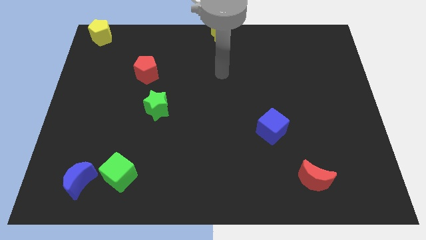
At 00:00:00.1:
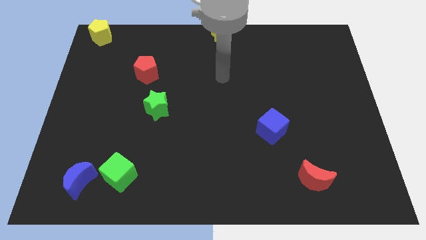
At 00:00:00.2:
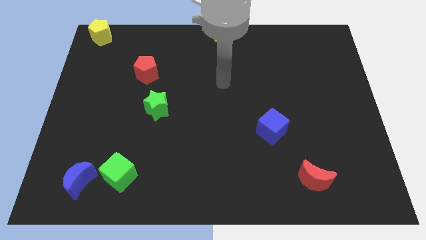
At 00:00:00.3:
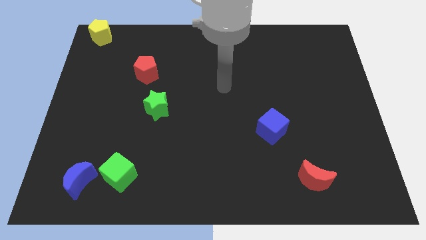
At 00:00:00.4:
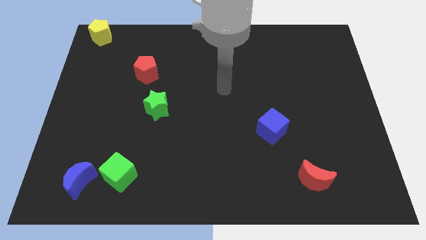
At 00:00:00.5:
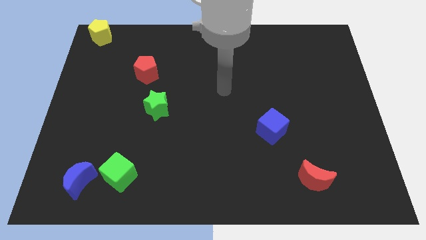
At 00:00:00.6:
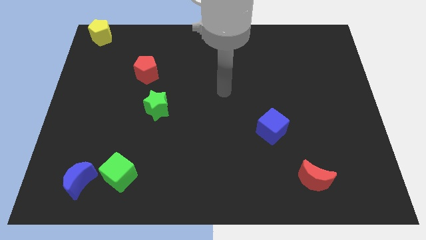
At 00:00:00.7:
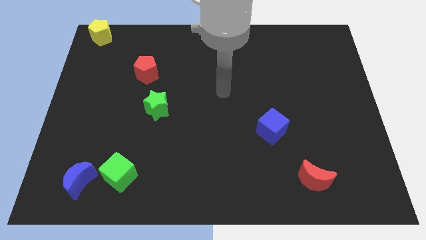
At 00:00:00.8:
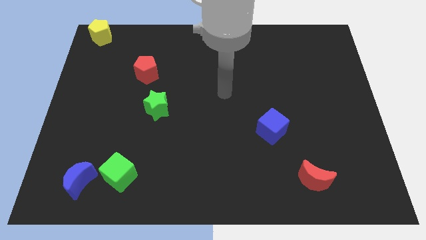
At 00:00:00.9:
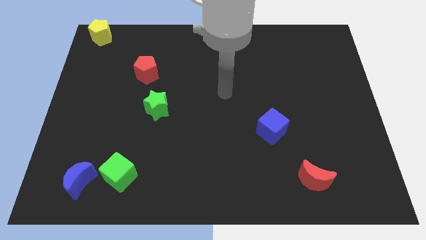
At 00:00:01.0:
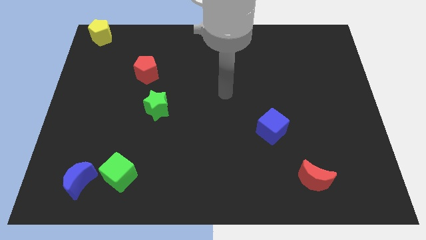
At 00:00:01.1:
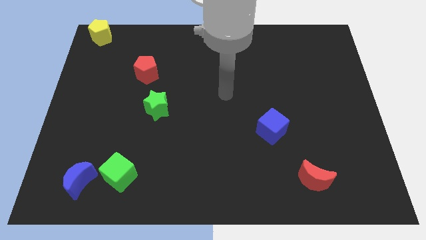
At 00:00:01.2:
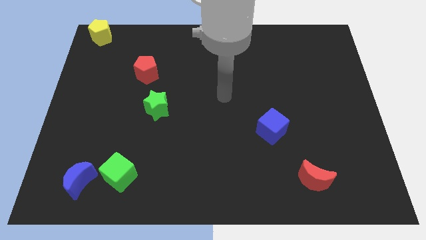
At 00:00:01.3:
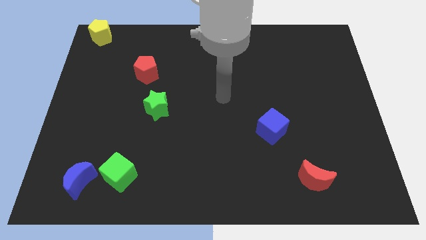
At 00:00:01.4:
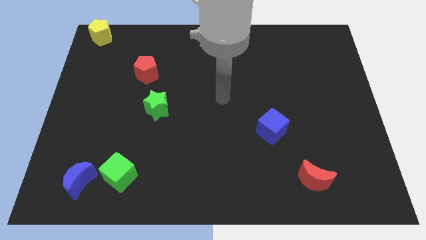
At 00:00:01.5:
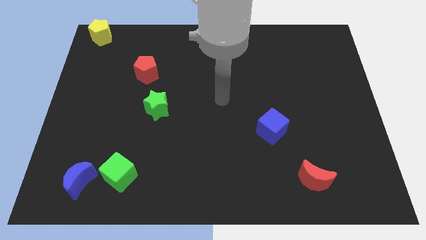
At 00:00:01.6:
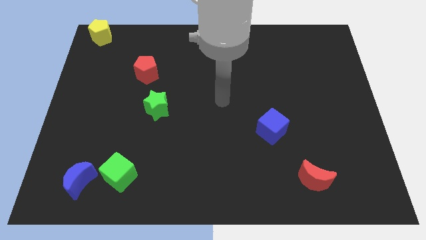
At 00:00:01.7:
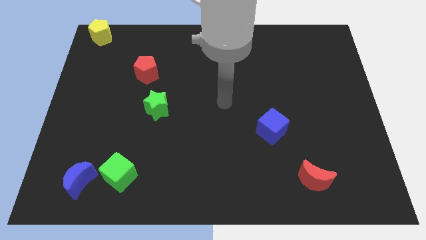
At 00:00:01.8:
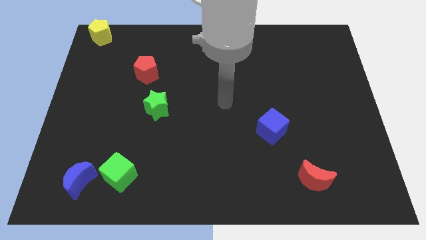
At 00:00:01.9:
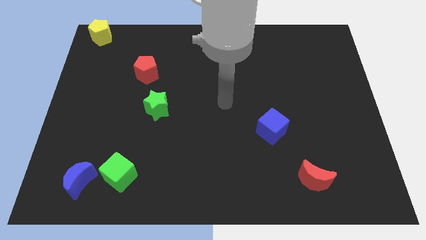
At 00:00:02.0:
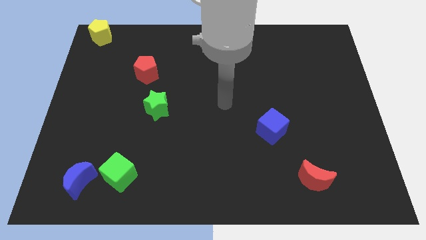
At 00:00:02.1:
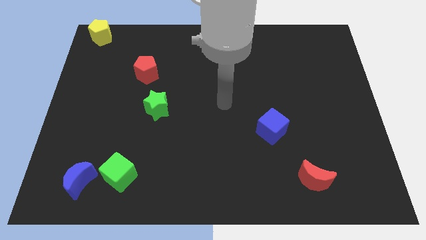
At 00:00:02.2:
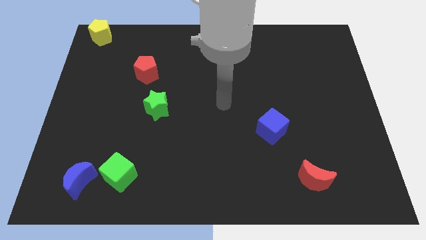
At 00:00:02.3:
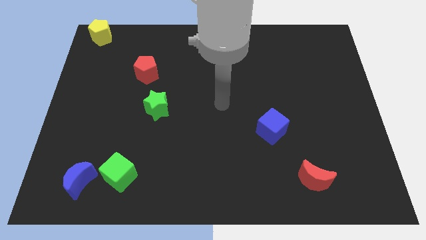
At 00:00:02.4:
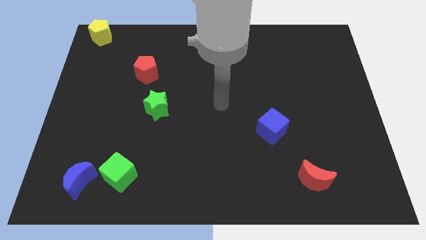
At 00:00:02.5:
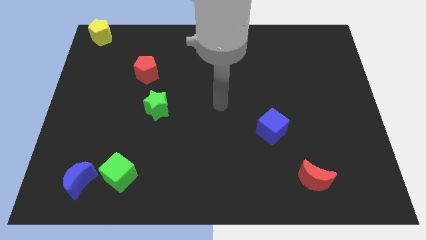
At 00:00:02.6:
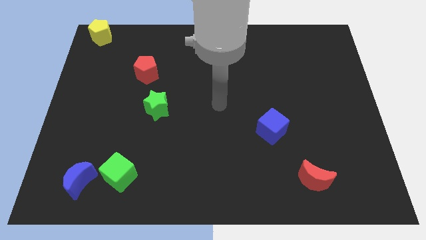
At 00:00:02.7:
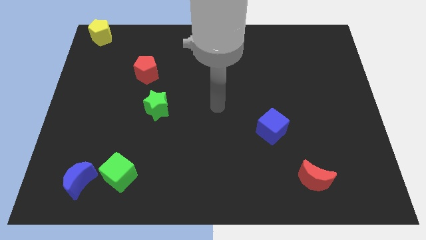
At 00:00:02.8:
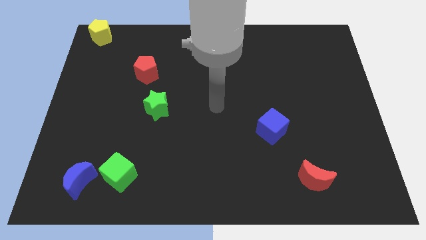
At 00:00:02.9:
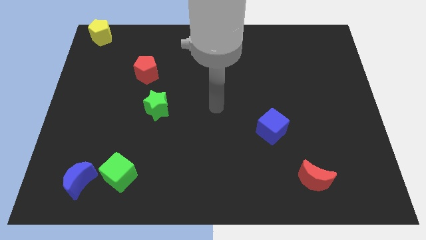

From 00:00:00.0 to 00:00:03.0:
place the arm in the middle of the board

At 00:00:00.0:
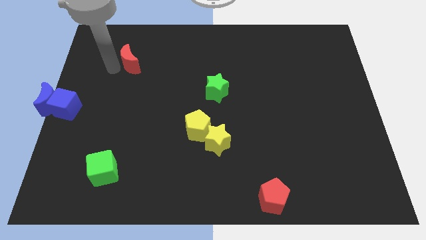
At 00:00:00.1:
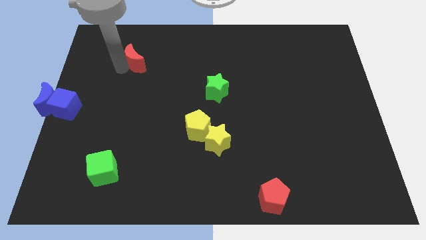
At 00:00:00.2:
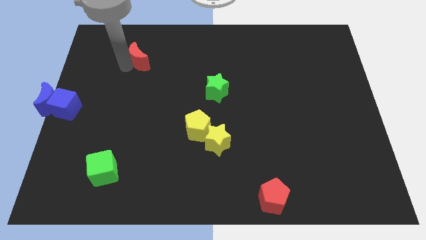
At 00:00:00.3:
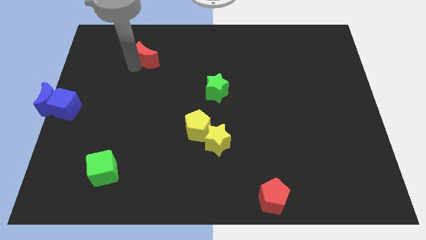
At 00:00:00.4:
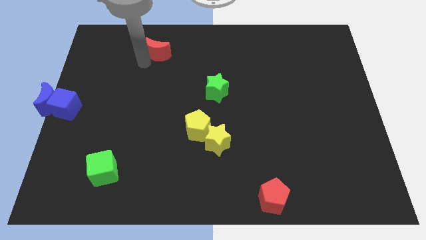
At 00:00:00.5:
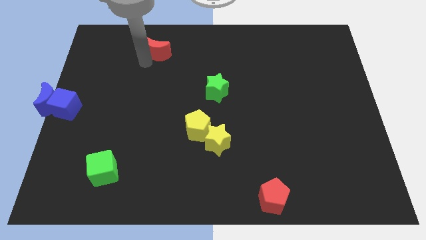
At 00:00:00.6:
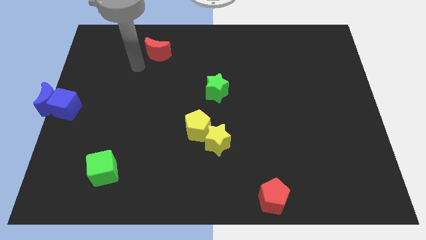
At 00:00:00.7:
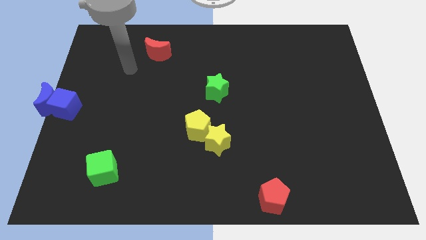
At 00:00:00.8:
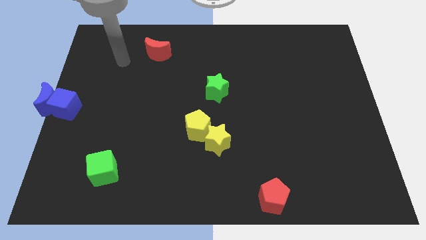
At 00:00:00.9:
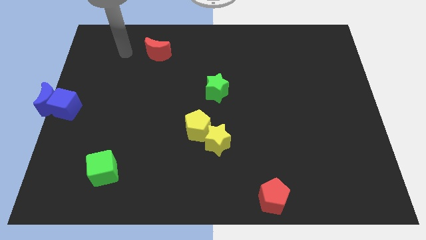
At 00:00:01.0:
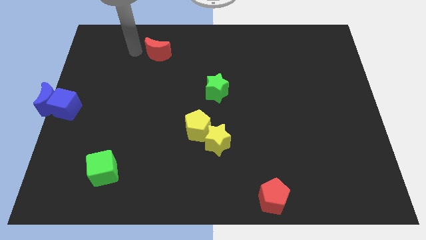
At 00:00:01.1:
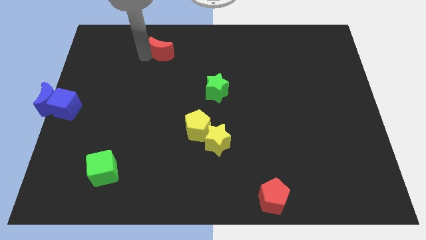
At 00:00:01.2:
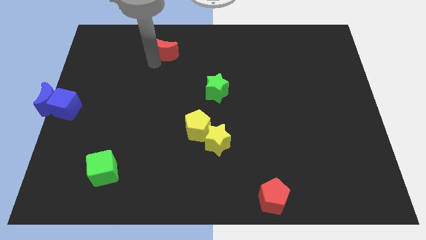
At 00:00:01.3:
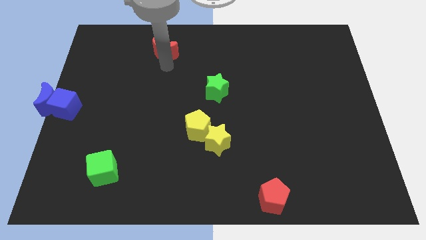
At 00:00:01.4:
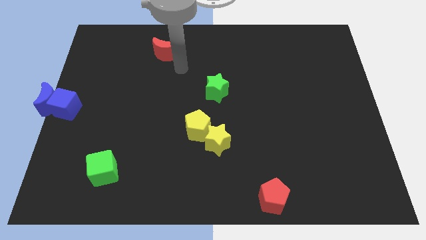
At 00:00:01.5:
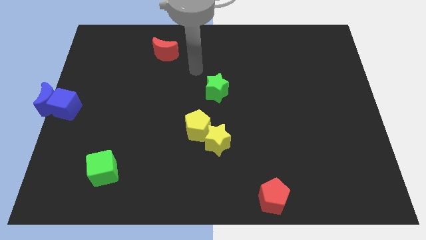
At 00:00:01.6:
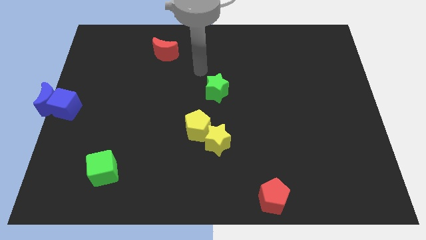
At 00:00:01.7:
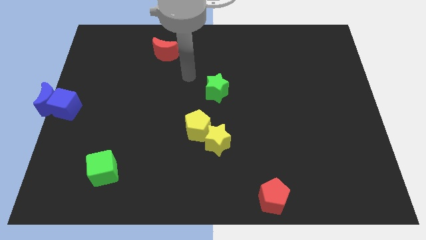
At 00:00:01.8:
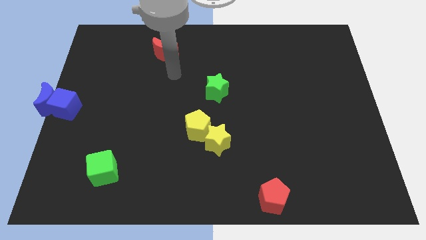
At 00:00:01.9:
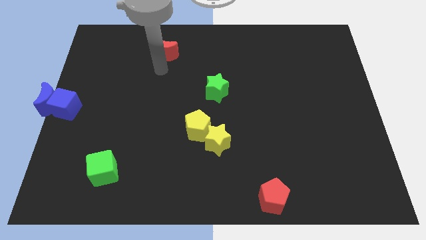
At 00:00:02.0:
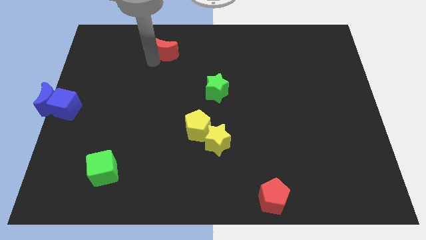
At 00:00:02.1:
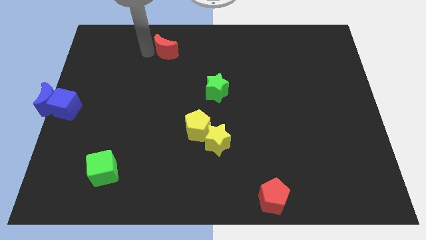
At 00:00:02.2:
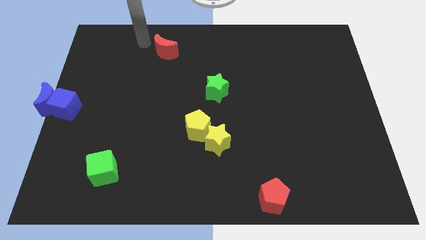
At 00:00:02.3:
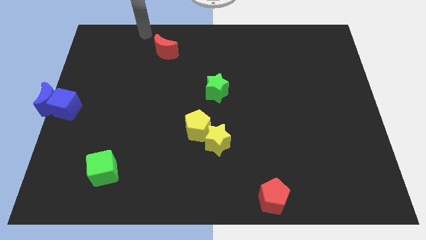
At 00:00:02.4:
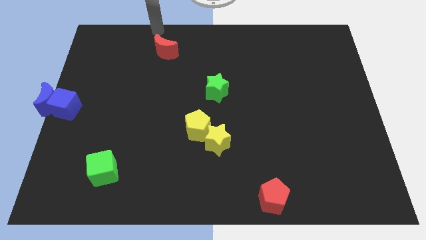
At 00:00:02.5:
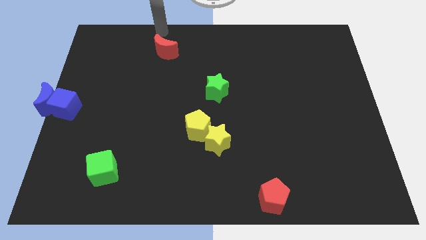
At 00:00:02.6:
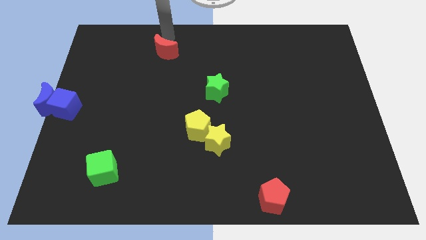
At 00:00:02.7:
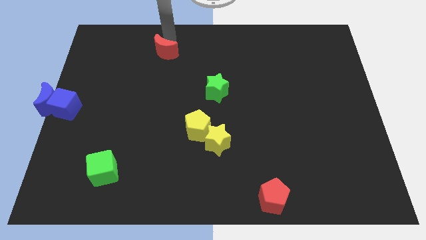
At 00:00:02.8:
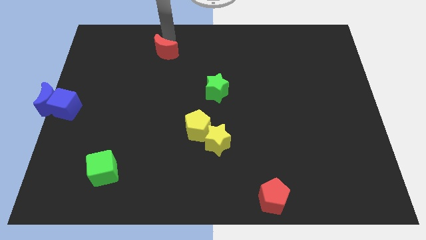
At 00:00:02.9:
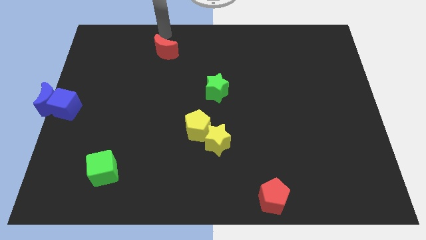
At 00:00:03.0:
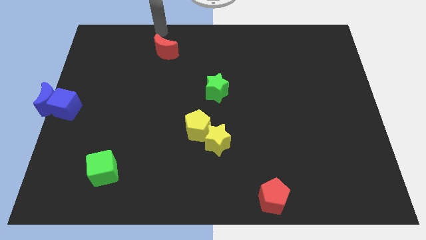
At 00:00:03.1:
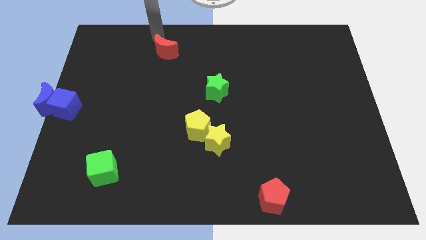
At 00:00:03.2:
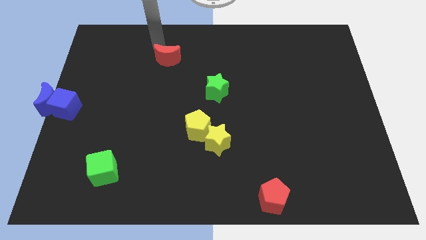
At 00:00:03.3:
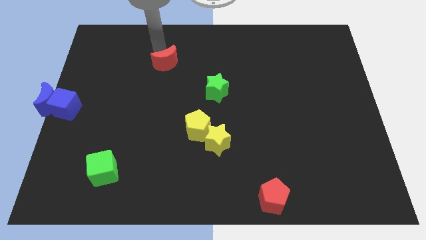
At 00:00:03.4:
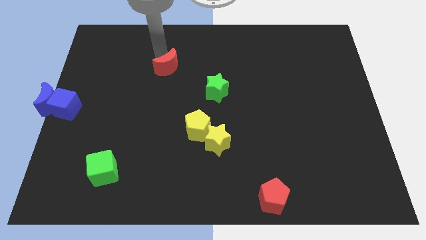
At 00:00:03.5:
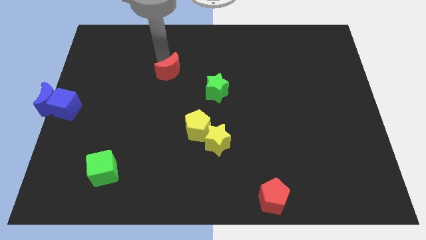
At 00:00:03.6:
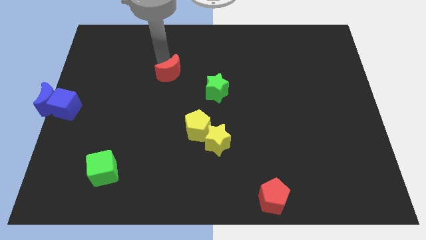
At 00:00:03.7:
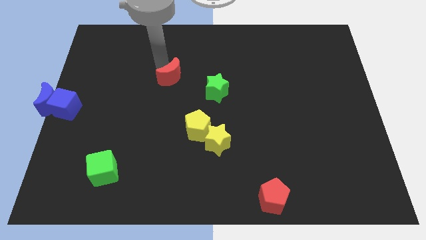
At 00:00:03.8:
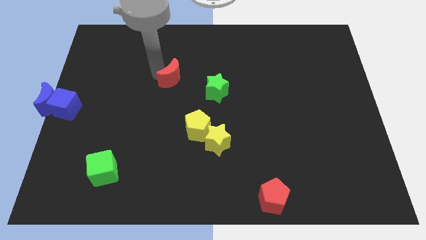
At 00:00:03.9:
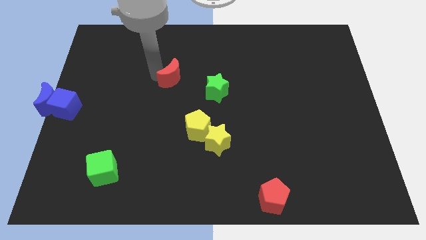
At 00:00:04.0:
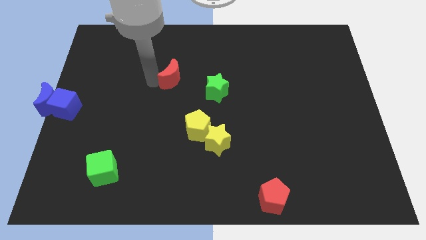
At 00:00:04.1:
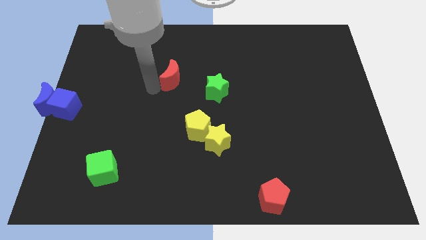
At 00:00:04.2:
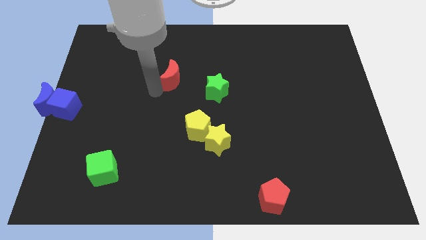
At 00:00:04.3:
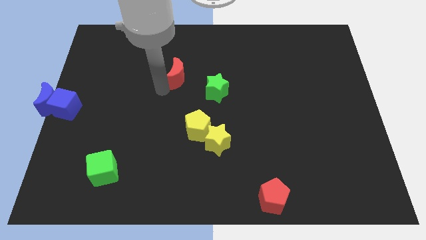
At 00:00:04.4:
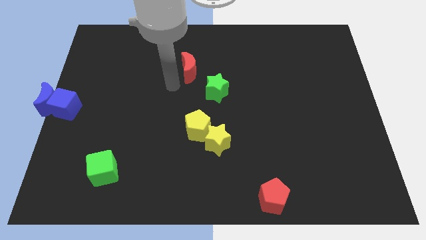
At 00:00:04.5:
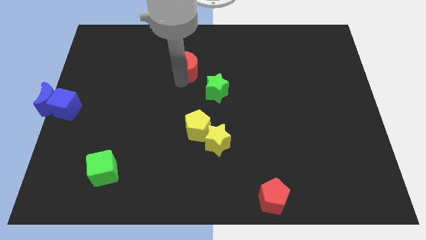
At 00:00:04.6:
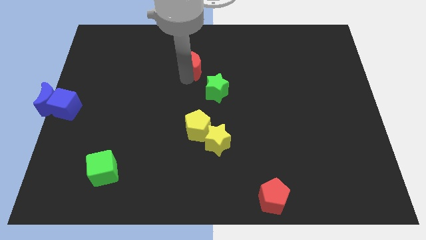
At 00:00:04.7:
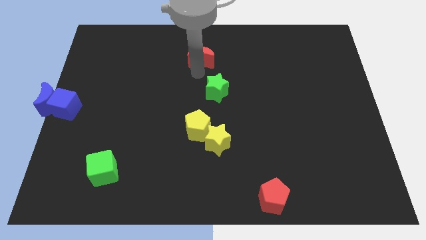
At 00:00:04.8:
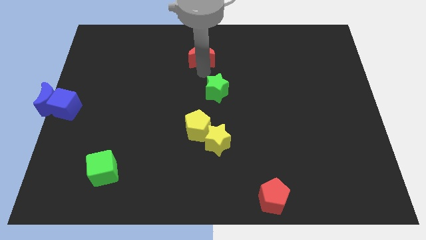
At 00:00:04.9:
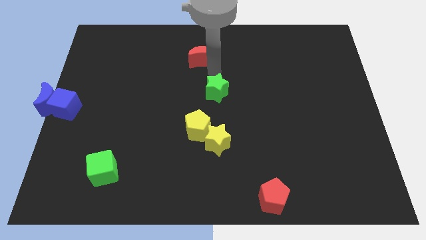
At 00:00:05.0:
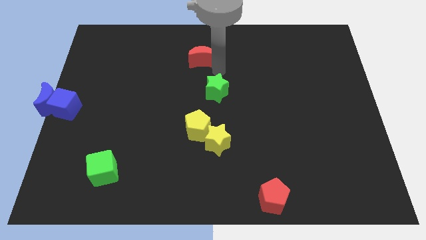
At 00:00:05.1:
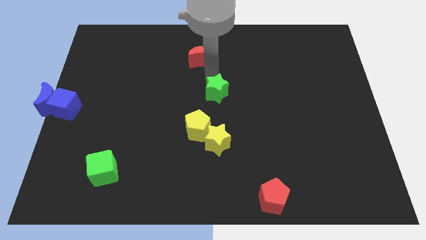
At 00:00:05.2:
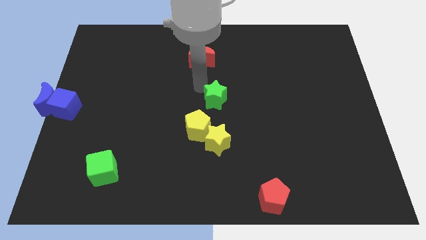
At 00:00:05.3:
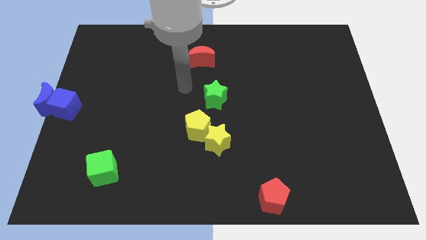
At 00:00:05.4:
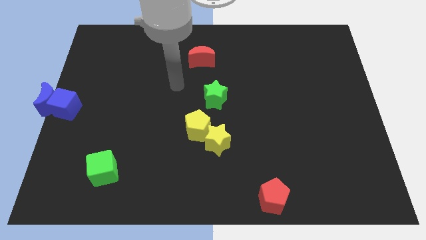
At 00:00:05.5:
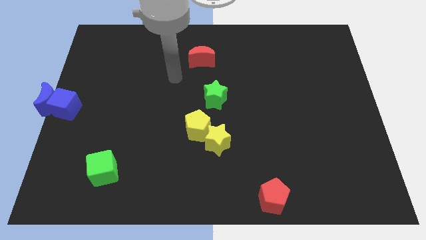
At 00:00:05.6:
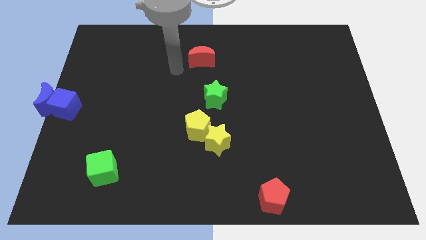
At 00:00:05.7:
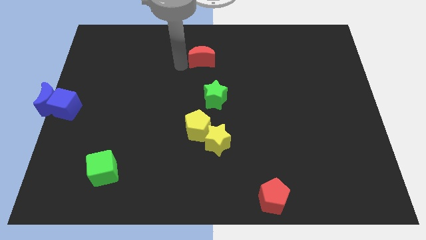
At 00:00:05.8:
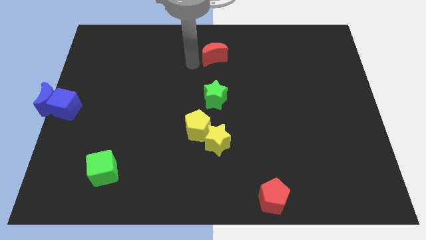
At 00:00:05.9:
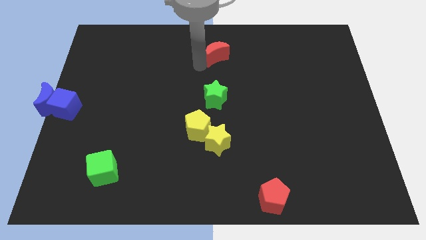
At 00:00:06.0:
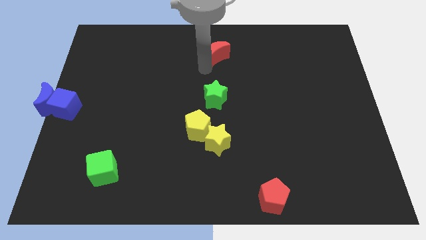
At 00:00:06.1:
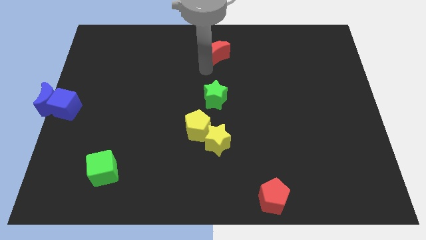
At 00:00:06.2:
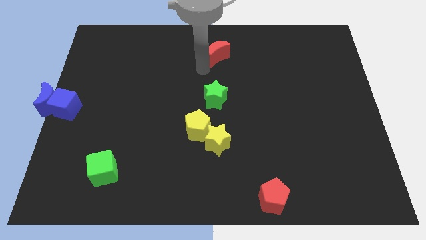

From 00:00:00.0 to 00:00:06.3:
move the red pentagon to the top of the green star
